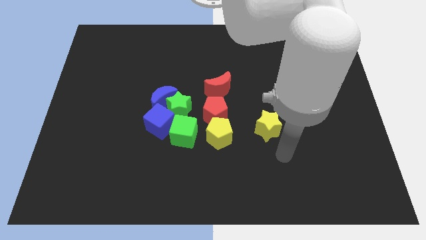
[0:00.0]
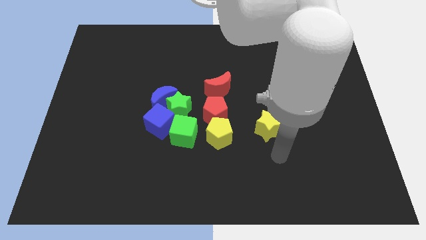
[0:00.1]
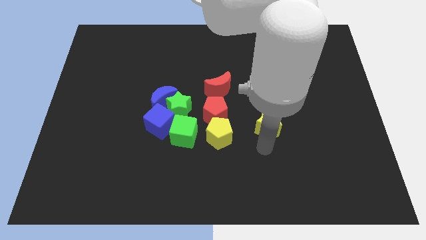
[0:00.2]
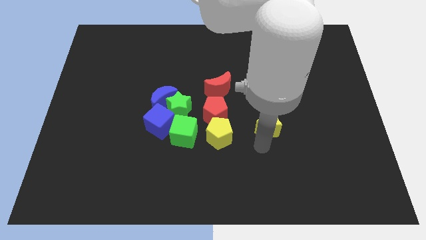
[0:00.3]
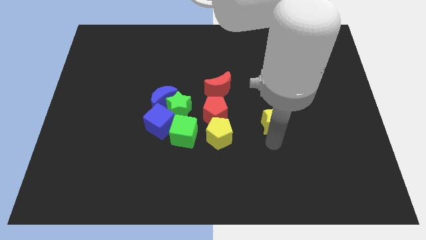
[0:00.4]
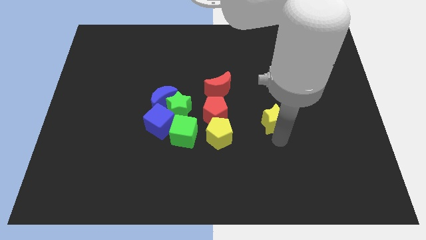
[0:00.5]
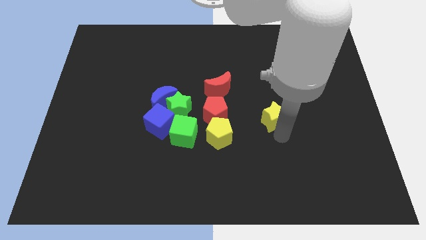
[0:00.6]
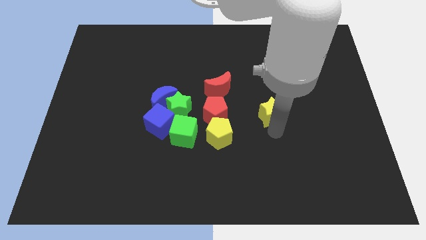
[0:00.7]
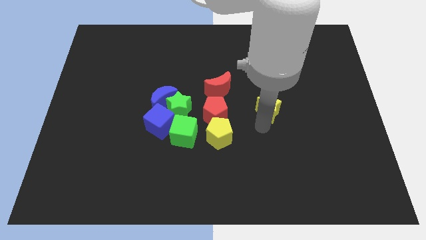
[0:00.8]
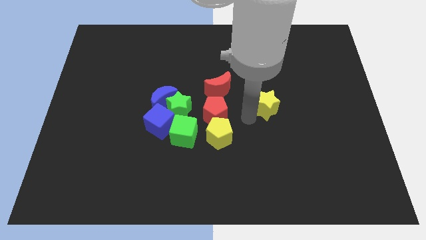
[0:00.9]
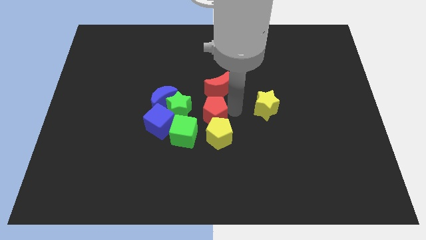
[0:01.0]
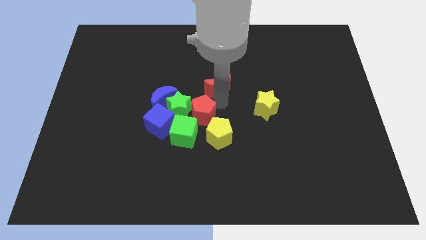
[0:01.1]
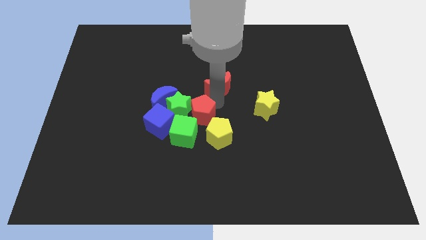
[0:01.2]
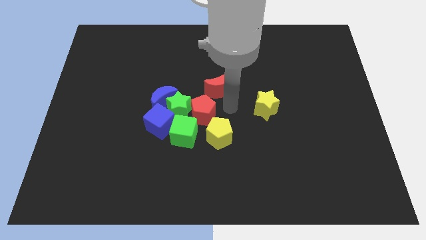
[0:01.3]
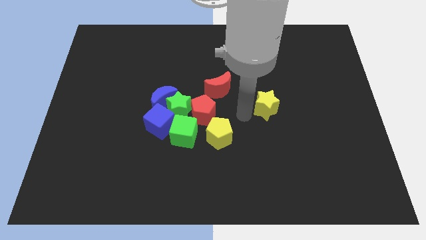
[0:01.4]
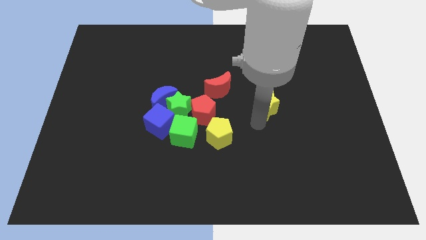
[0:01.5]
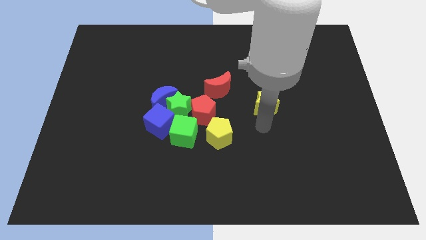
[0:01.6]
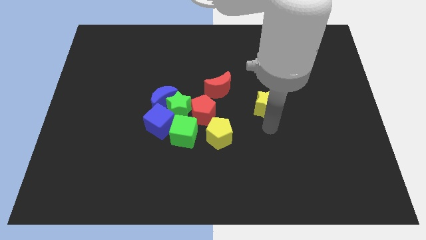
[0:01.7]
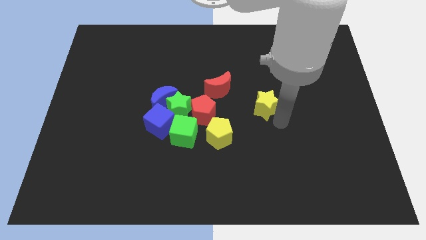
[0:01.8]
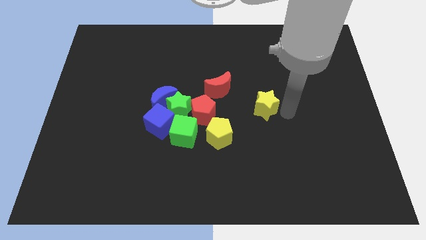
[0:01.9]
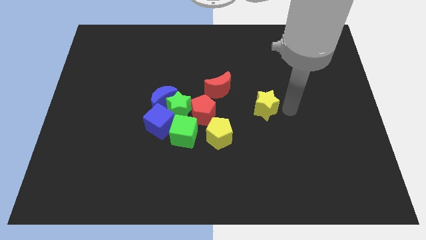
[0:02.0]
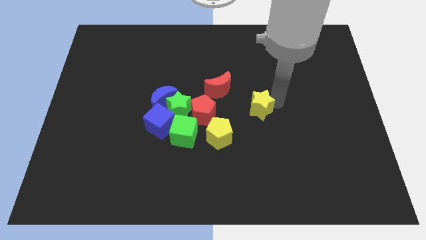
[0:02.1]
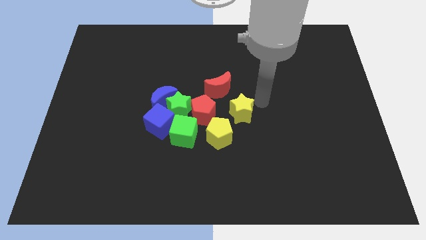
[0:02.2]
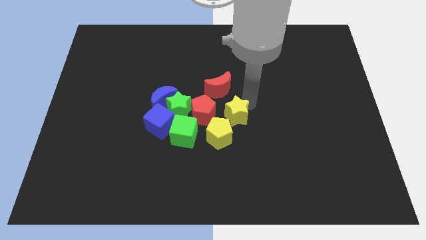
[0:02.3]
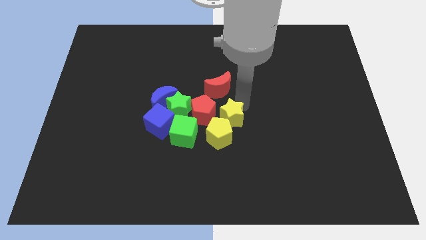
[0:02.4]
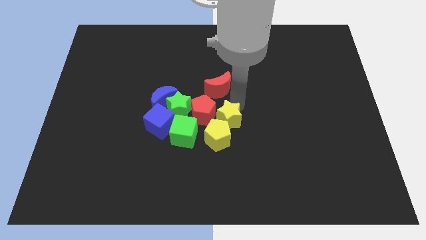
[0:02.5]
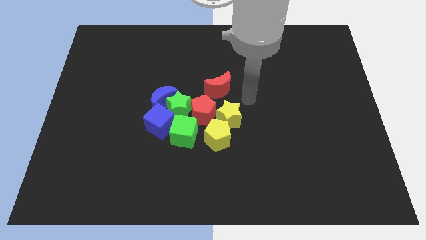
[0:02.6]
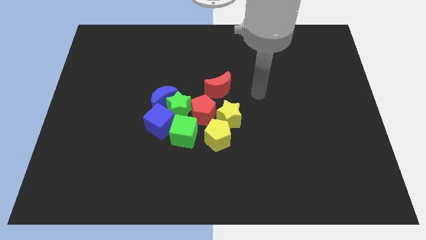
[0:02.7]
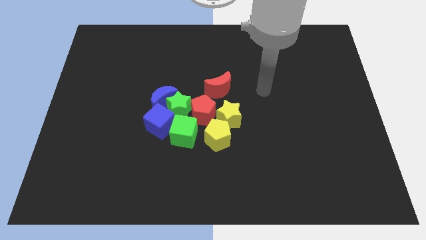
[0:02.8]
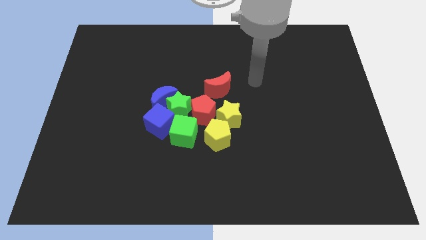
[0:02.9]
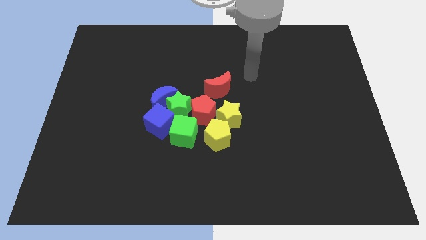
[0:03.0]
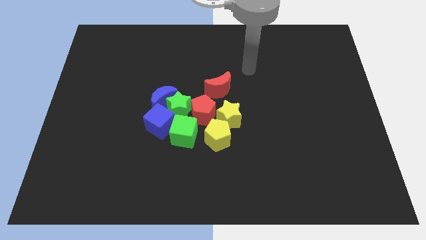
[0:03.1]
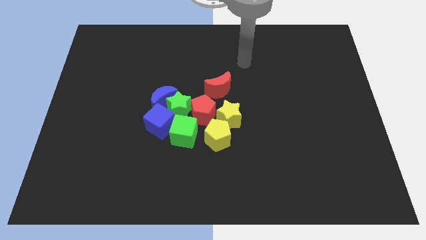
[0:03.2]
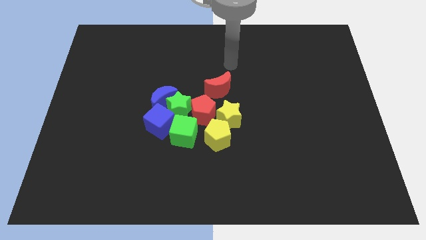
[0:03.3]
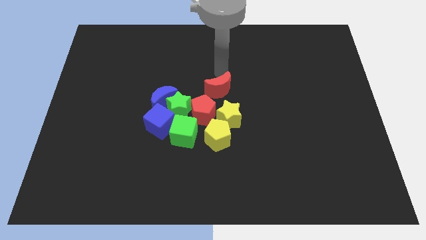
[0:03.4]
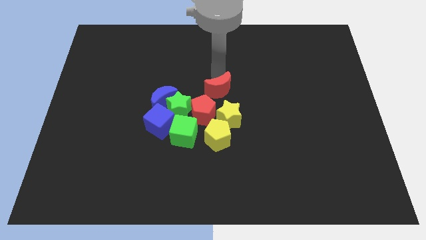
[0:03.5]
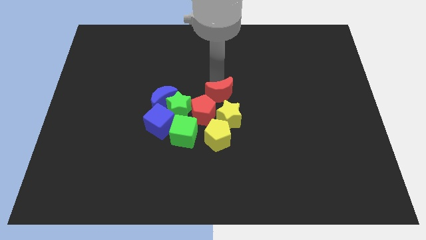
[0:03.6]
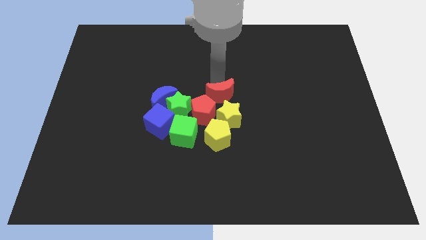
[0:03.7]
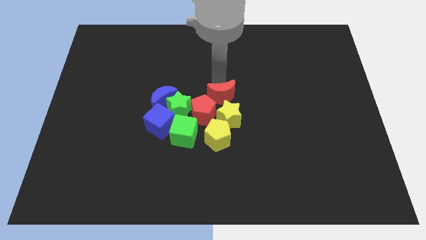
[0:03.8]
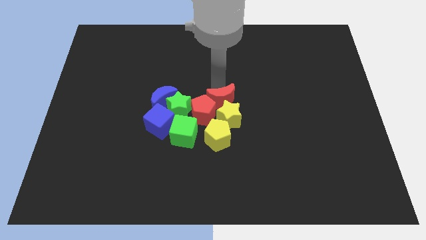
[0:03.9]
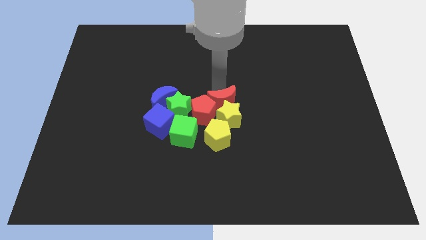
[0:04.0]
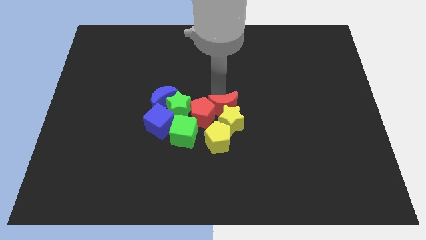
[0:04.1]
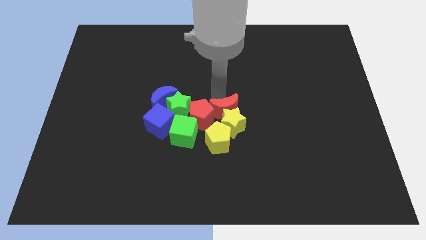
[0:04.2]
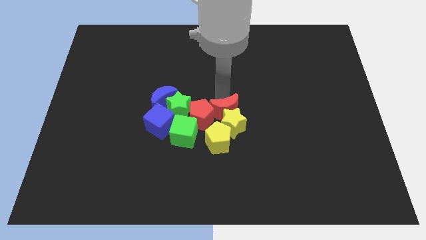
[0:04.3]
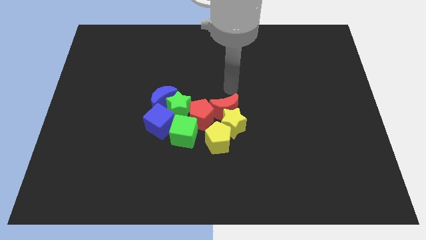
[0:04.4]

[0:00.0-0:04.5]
make a group of all the blocks

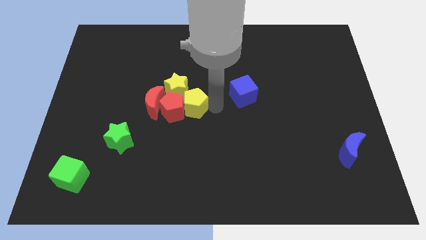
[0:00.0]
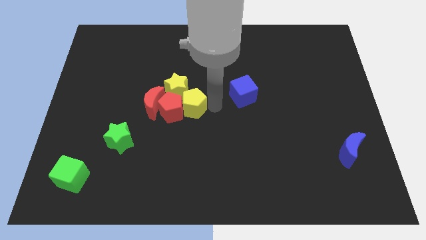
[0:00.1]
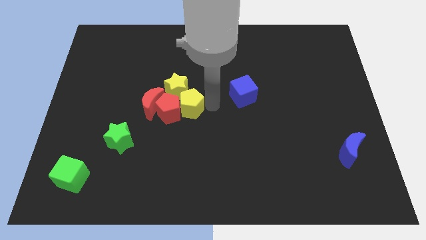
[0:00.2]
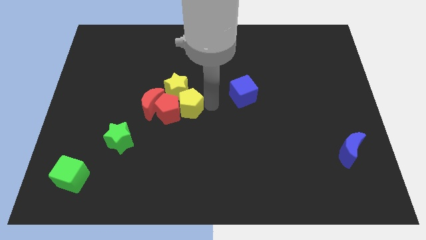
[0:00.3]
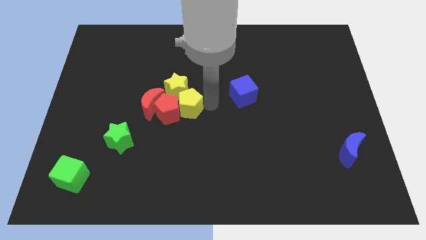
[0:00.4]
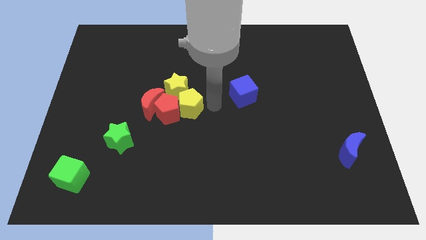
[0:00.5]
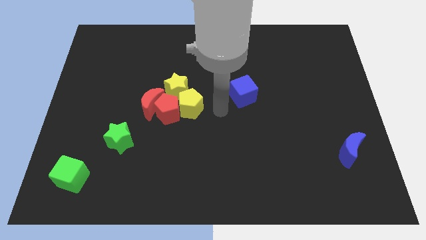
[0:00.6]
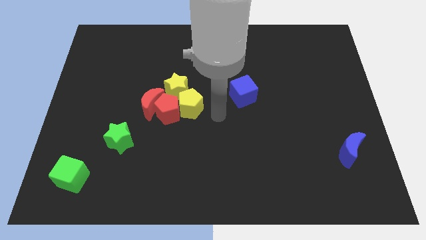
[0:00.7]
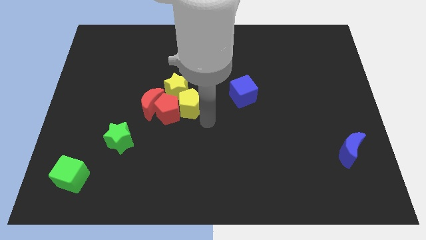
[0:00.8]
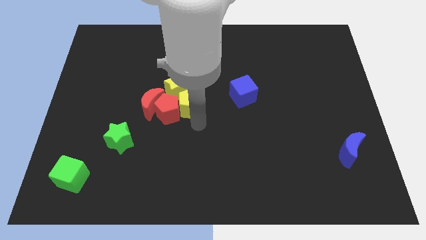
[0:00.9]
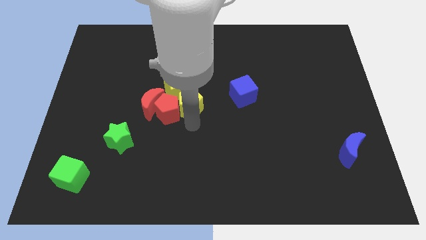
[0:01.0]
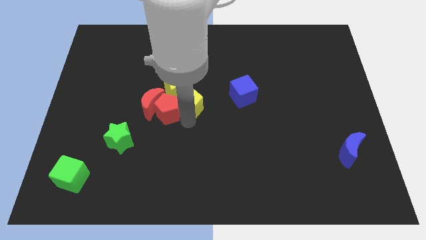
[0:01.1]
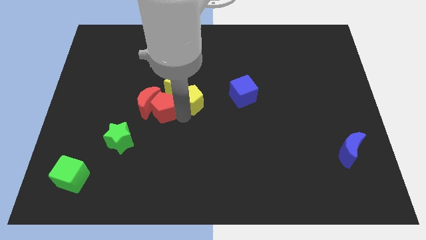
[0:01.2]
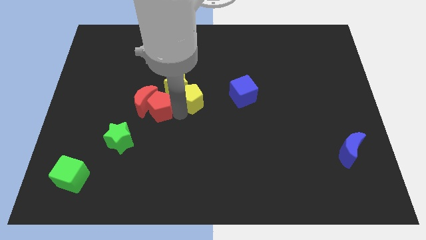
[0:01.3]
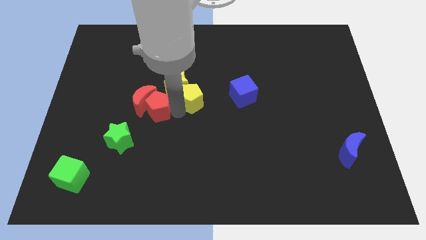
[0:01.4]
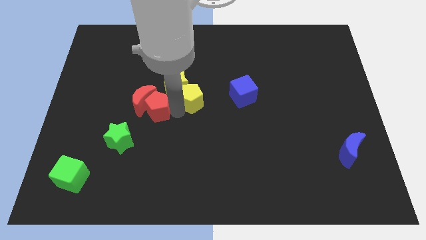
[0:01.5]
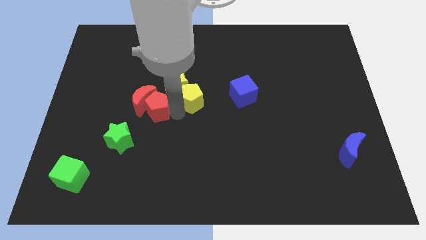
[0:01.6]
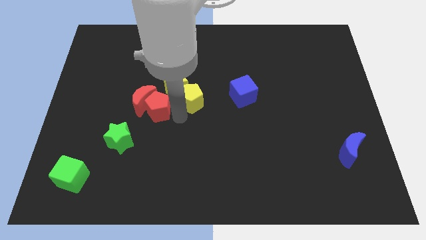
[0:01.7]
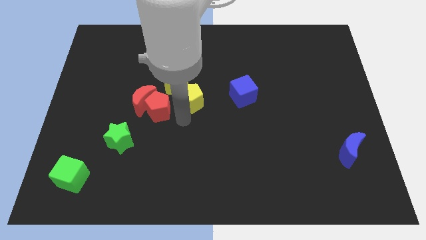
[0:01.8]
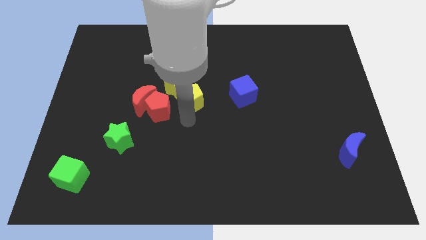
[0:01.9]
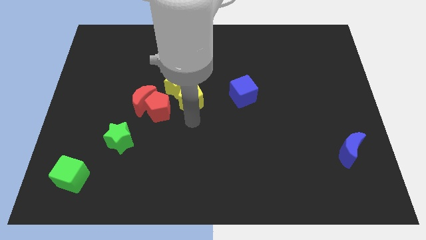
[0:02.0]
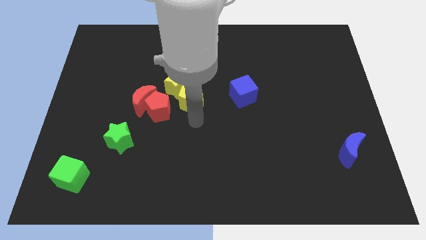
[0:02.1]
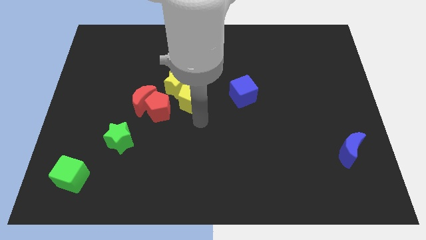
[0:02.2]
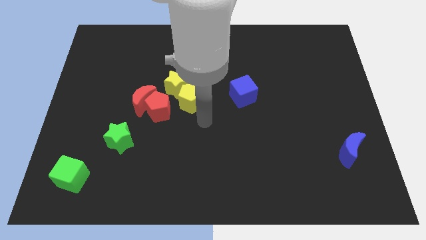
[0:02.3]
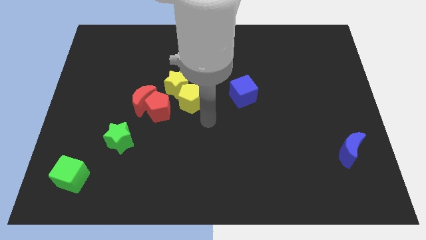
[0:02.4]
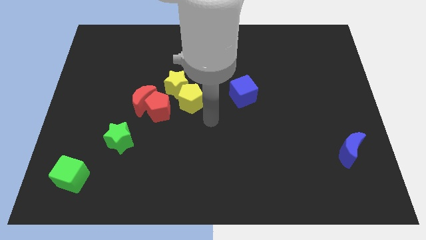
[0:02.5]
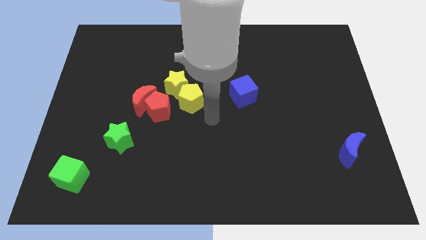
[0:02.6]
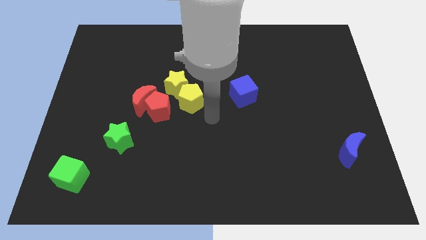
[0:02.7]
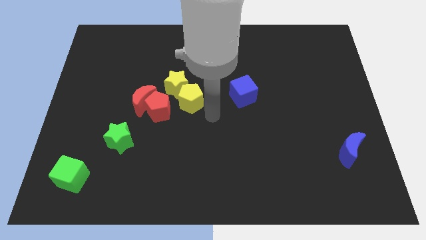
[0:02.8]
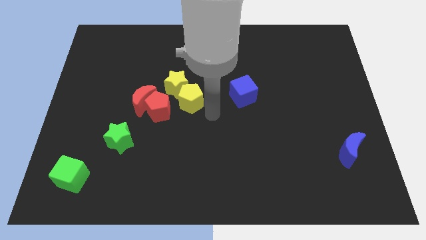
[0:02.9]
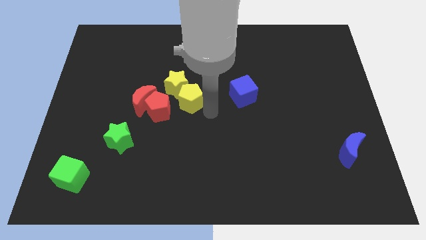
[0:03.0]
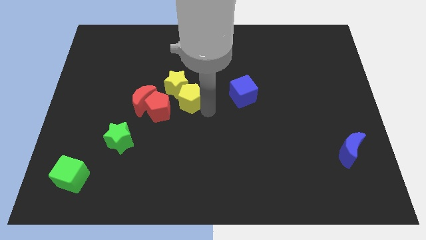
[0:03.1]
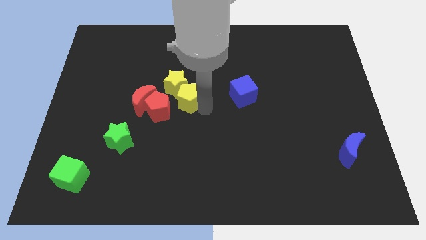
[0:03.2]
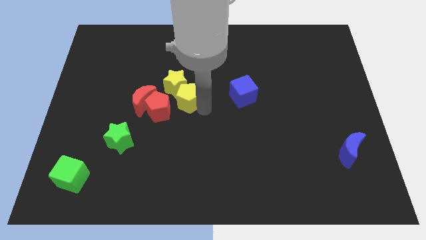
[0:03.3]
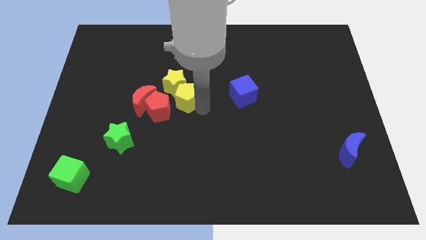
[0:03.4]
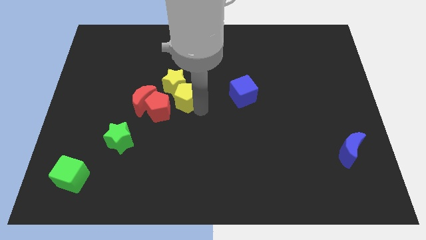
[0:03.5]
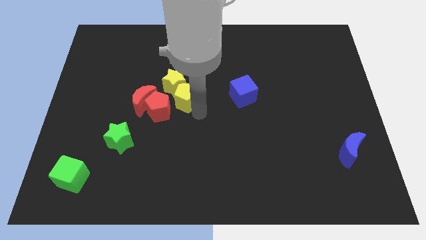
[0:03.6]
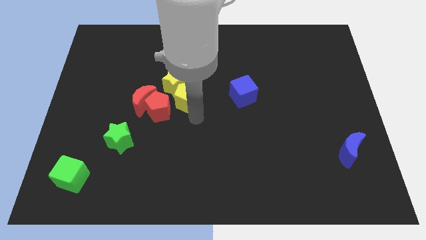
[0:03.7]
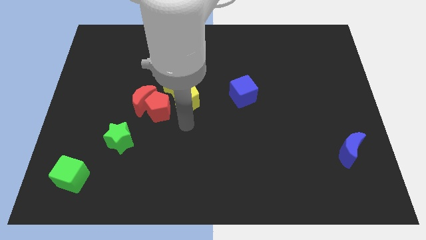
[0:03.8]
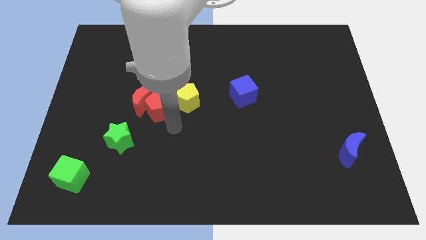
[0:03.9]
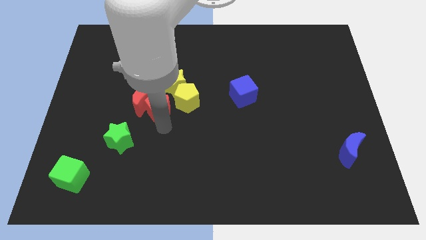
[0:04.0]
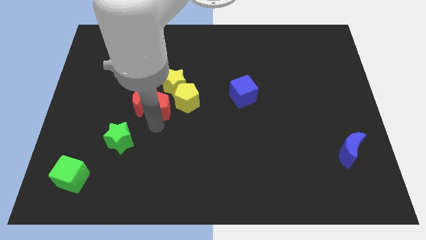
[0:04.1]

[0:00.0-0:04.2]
push the yellow pentagon into the yellow star

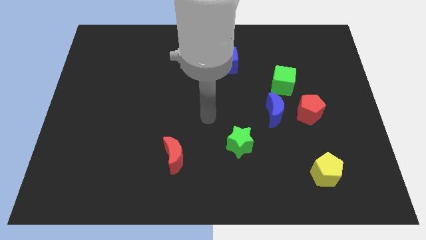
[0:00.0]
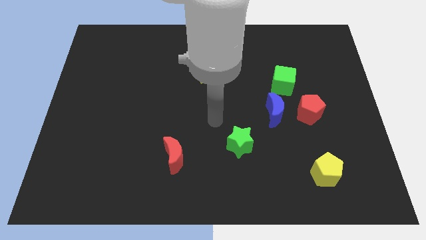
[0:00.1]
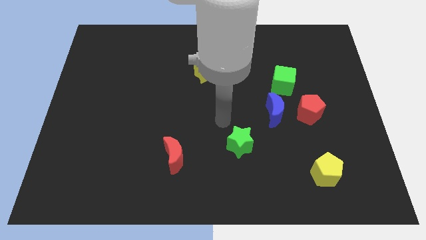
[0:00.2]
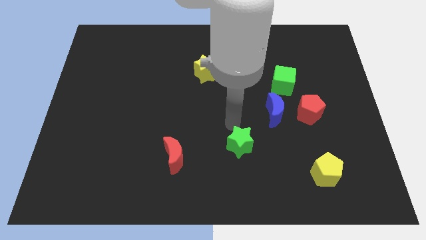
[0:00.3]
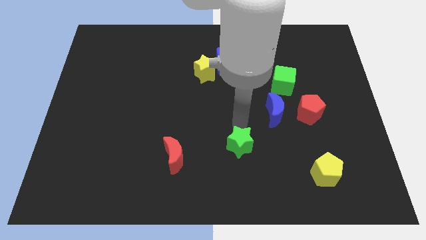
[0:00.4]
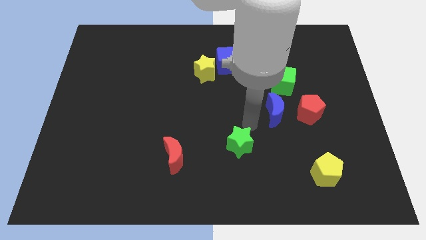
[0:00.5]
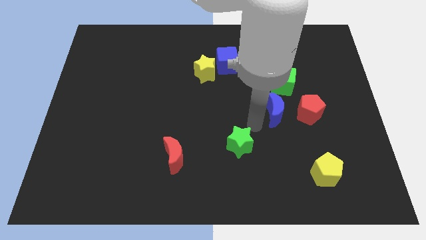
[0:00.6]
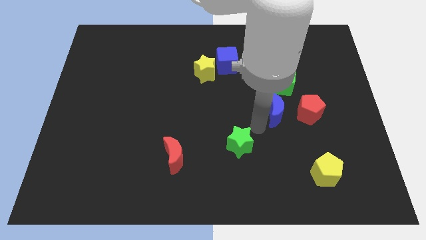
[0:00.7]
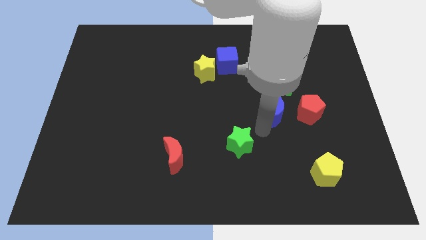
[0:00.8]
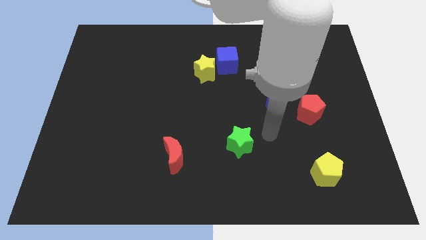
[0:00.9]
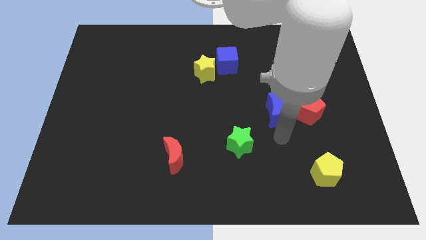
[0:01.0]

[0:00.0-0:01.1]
place arm at the bottom of blue crescent
